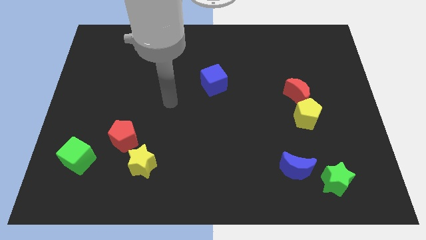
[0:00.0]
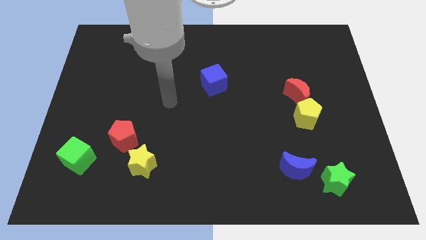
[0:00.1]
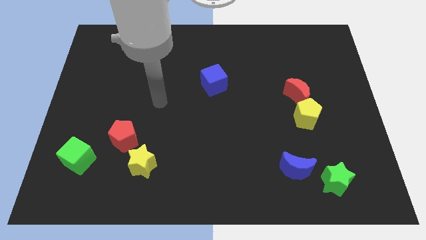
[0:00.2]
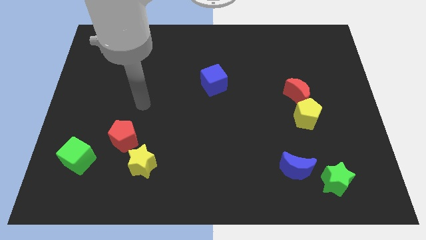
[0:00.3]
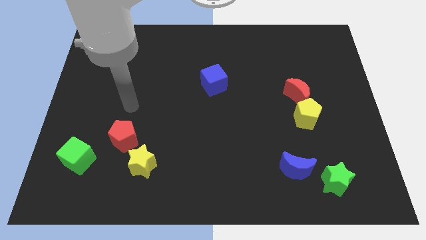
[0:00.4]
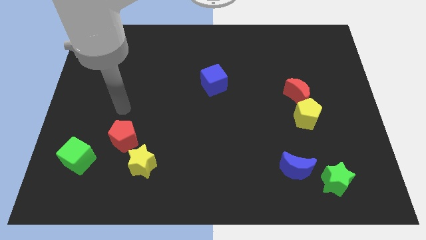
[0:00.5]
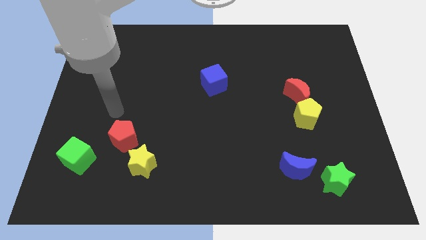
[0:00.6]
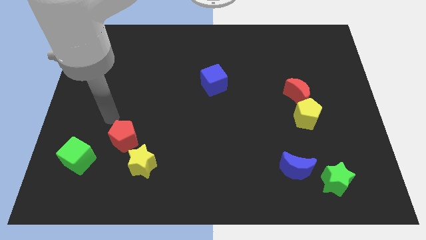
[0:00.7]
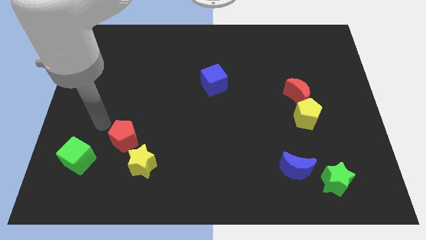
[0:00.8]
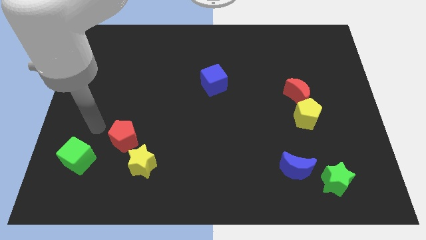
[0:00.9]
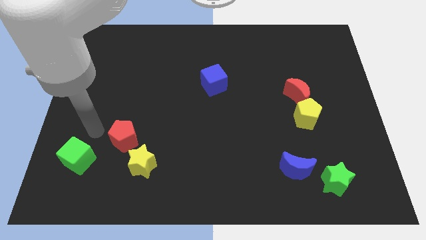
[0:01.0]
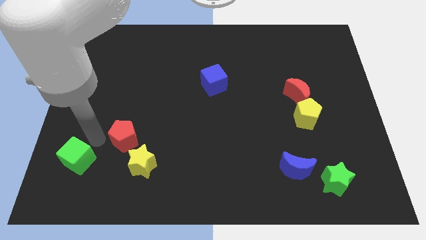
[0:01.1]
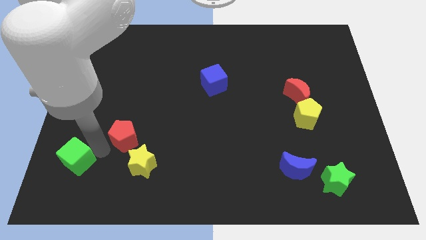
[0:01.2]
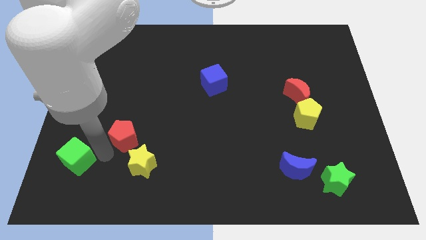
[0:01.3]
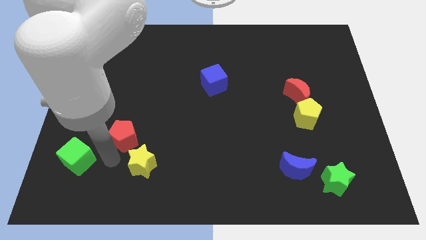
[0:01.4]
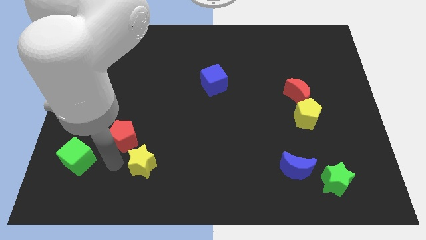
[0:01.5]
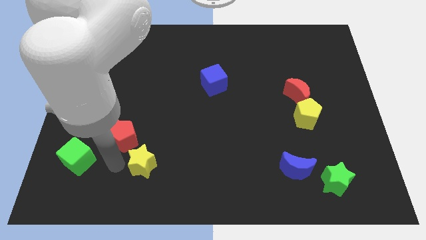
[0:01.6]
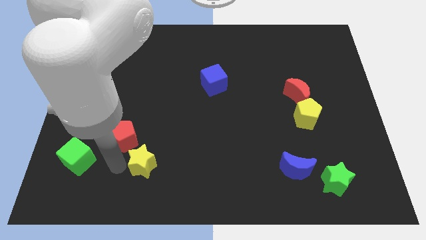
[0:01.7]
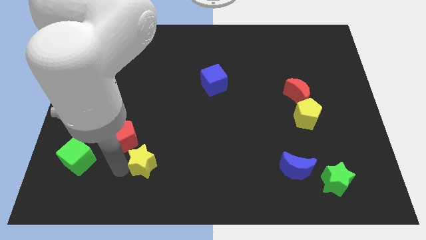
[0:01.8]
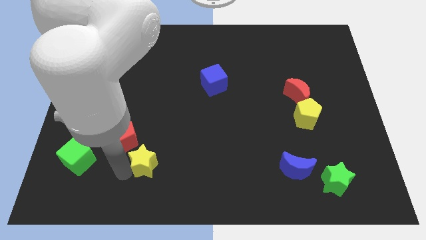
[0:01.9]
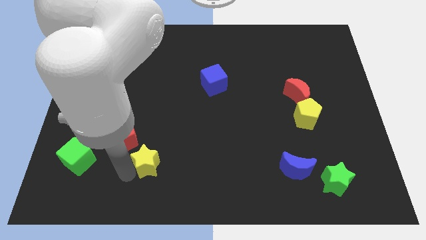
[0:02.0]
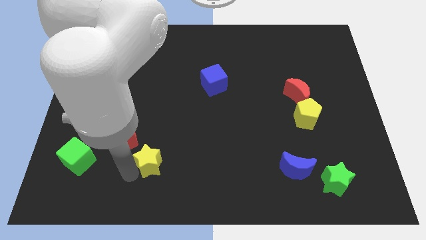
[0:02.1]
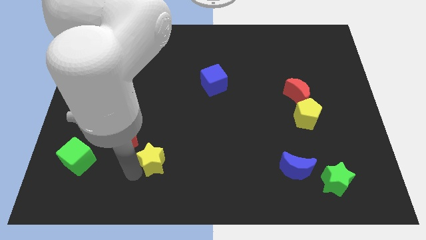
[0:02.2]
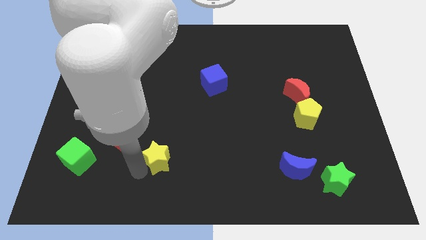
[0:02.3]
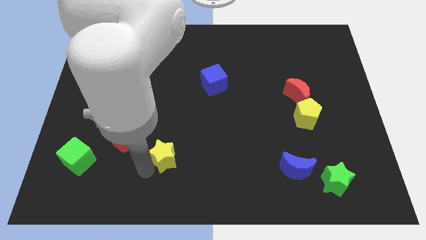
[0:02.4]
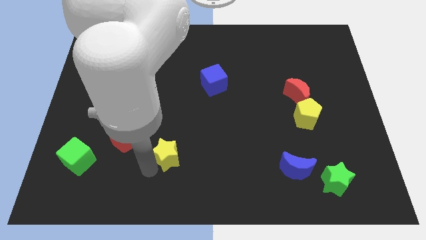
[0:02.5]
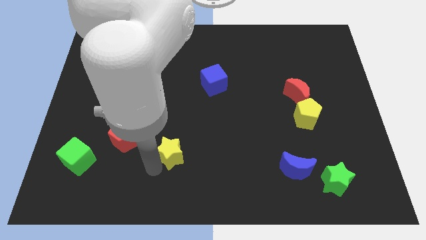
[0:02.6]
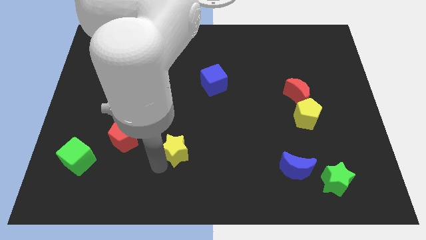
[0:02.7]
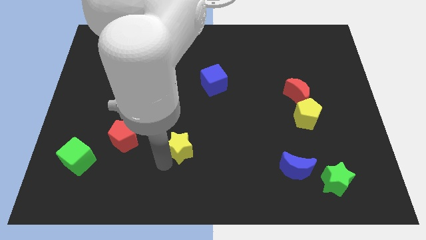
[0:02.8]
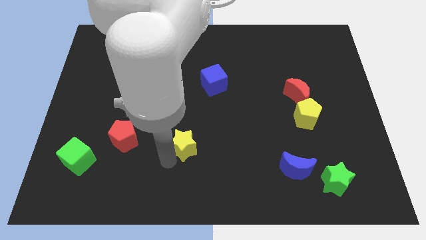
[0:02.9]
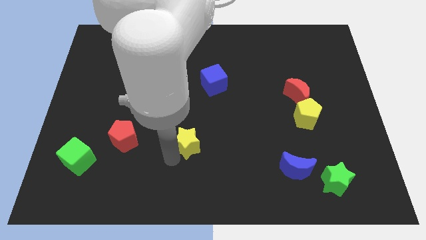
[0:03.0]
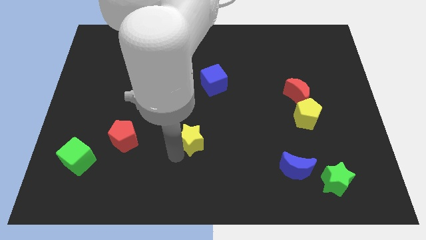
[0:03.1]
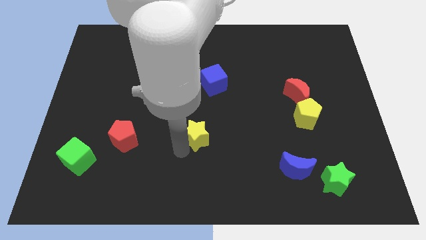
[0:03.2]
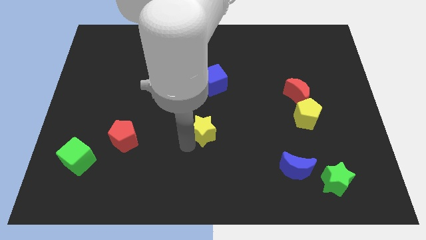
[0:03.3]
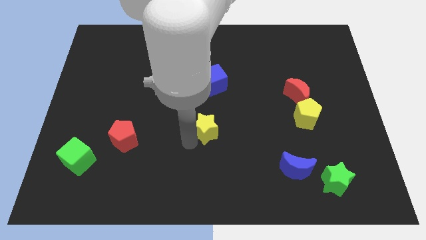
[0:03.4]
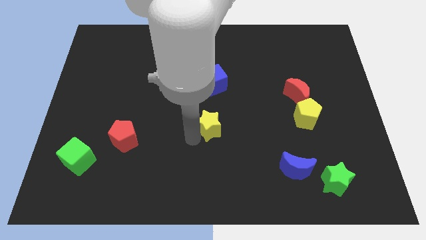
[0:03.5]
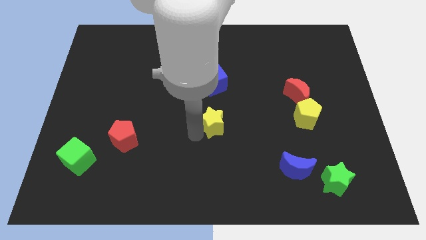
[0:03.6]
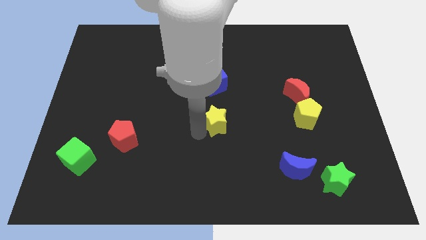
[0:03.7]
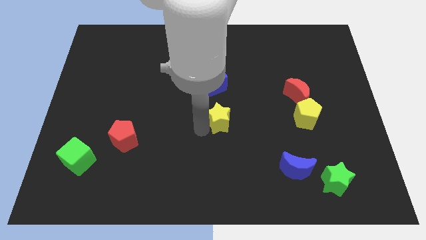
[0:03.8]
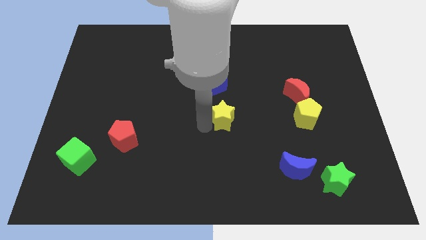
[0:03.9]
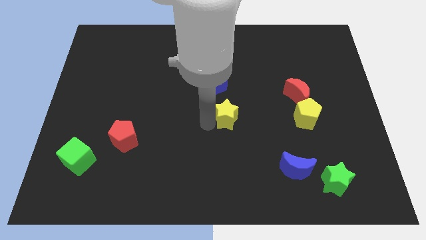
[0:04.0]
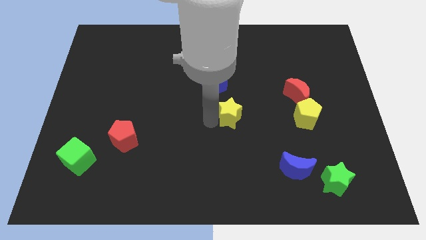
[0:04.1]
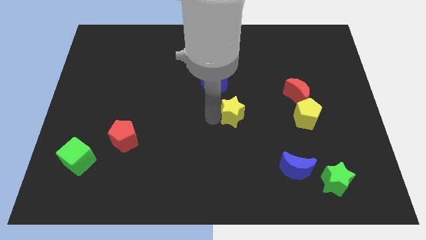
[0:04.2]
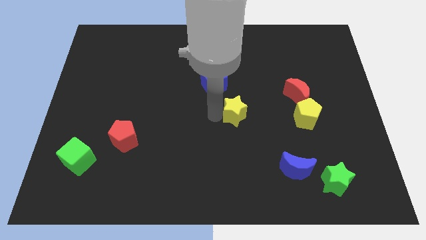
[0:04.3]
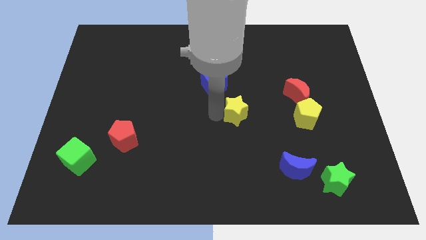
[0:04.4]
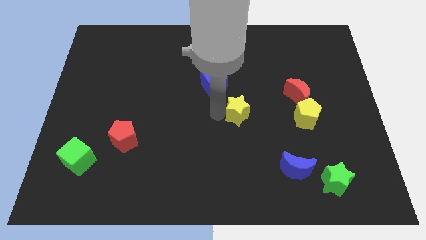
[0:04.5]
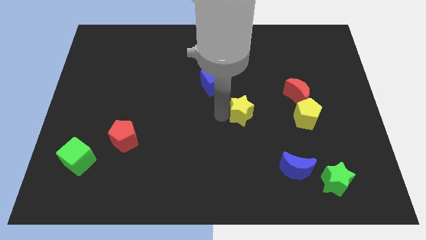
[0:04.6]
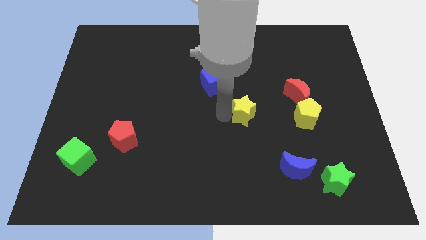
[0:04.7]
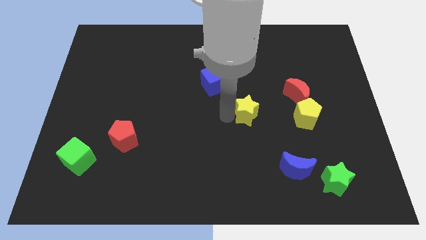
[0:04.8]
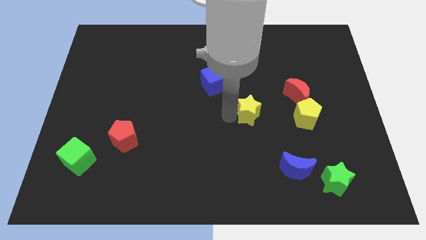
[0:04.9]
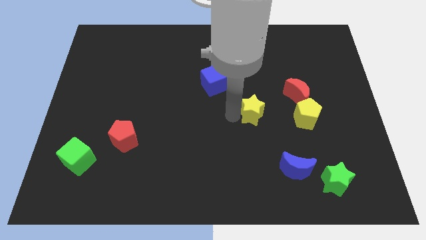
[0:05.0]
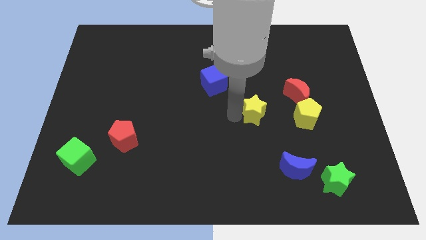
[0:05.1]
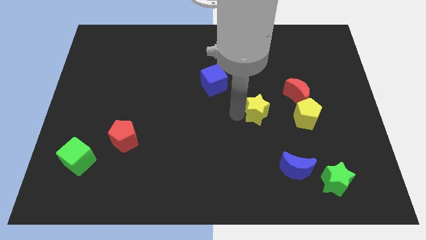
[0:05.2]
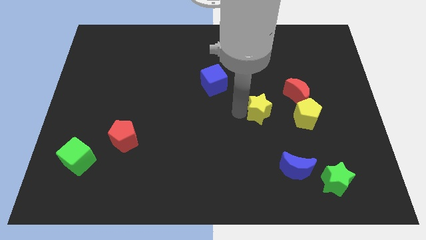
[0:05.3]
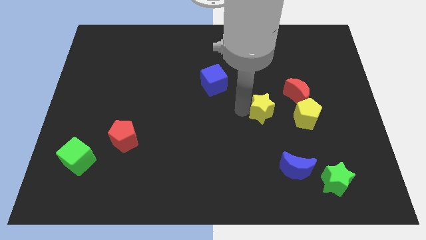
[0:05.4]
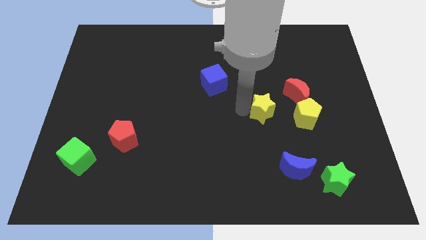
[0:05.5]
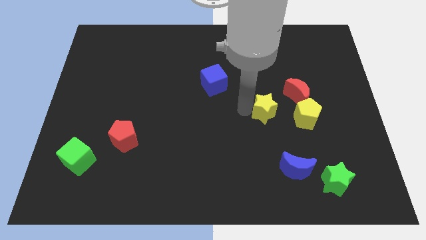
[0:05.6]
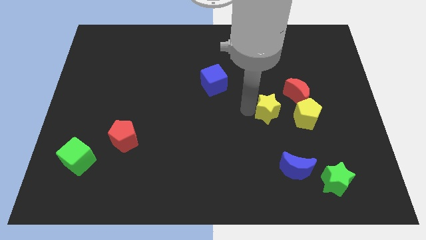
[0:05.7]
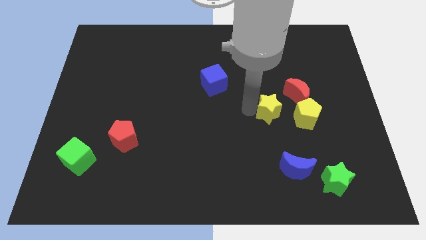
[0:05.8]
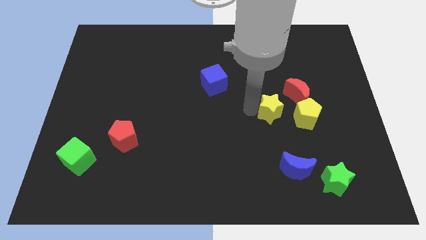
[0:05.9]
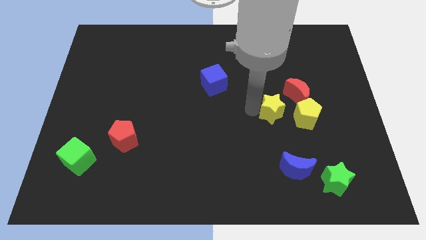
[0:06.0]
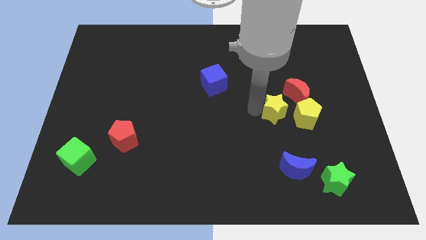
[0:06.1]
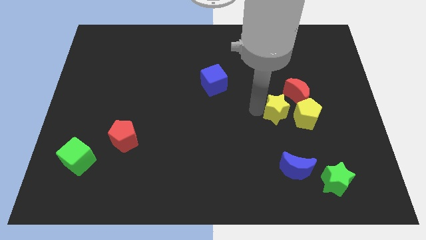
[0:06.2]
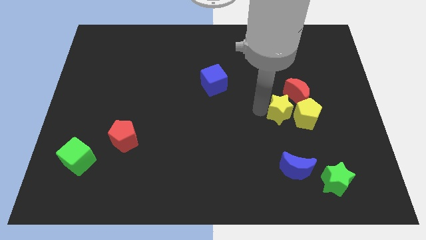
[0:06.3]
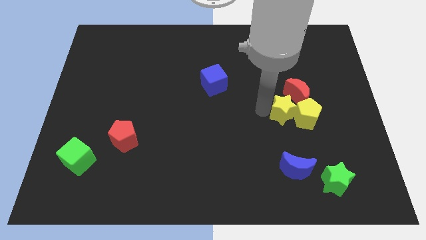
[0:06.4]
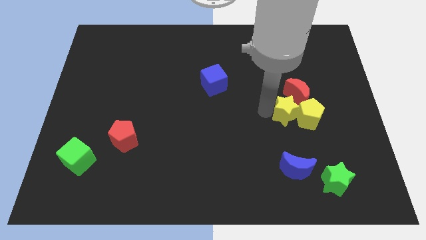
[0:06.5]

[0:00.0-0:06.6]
move the yellow star close to the yellow pentagon

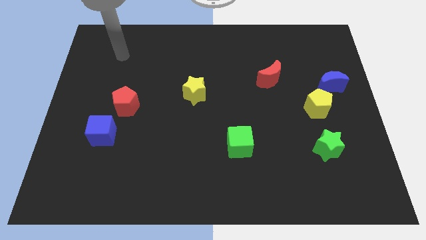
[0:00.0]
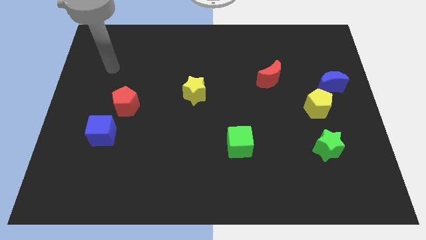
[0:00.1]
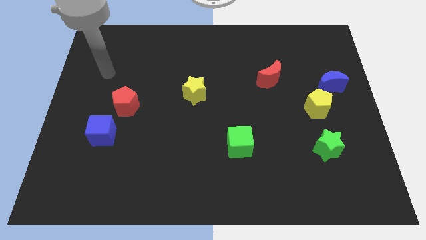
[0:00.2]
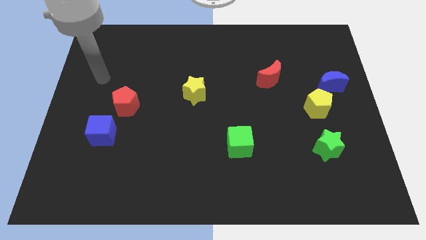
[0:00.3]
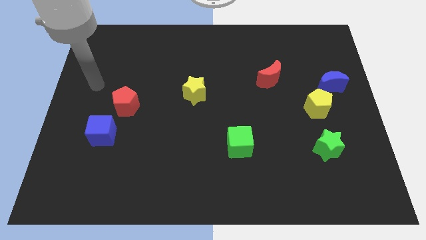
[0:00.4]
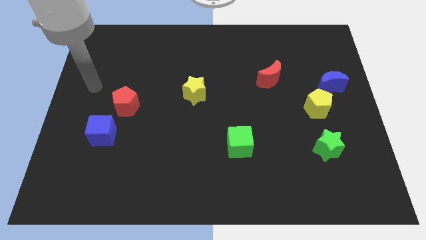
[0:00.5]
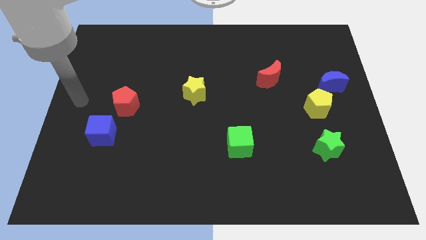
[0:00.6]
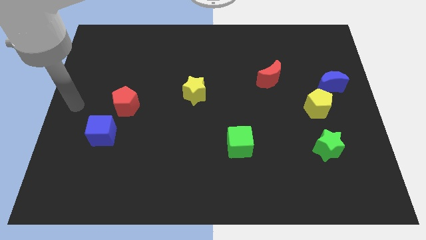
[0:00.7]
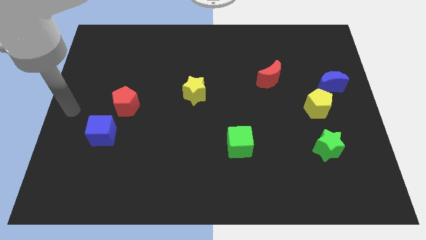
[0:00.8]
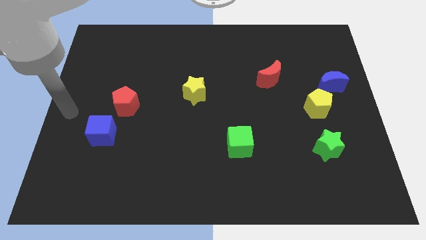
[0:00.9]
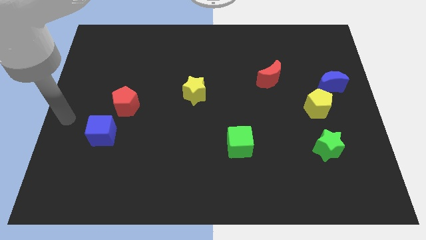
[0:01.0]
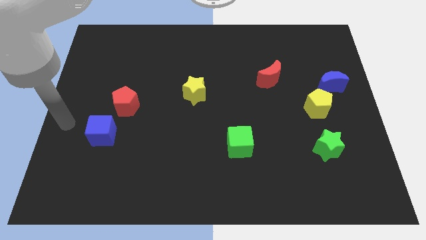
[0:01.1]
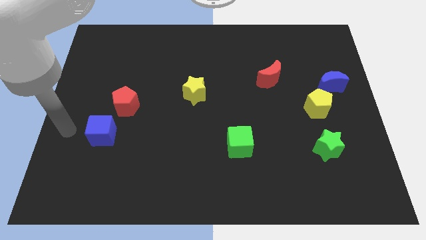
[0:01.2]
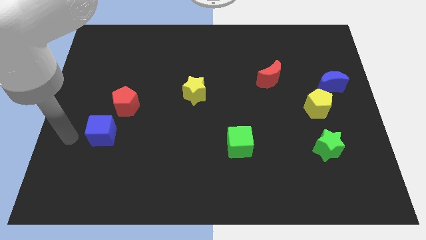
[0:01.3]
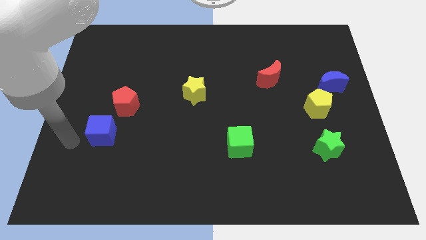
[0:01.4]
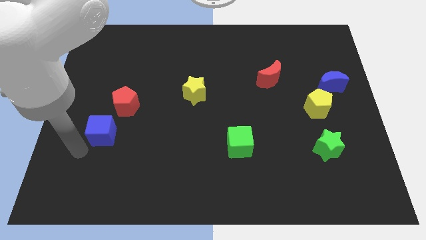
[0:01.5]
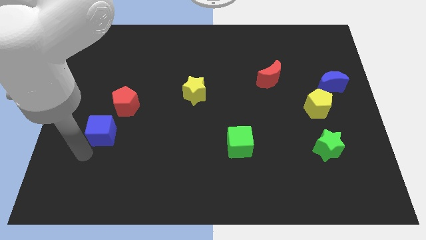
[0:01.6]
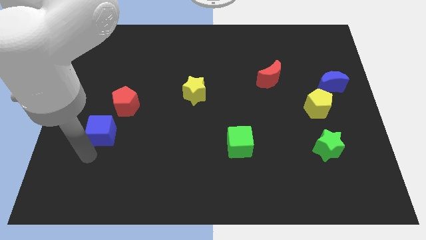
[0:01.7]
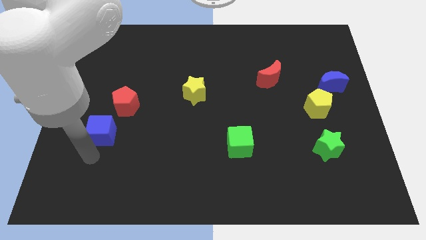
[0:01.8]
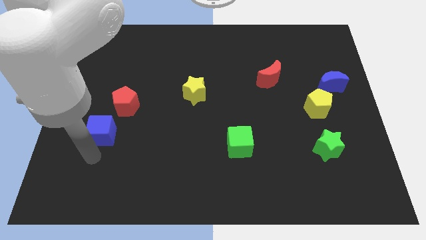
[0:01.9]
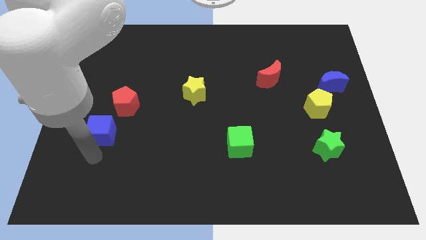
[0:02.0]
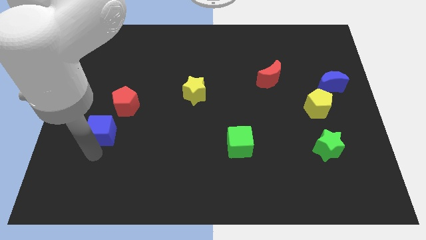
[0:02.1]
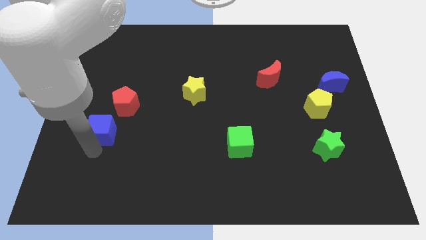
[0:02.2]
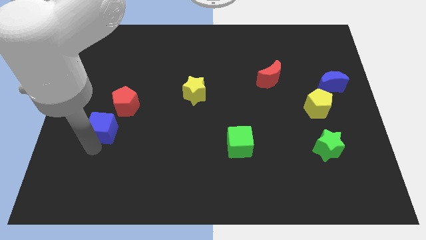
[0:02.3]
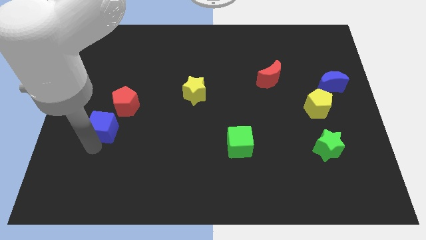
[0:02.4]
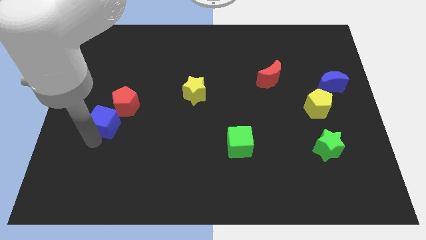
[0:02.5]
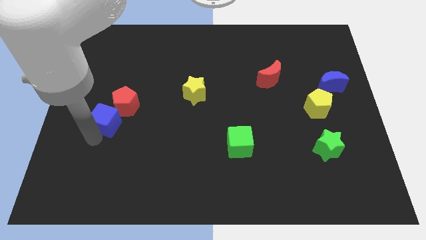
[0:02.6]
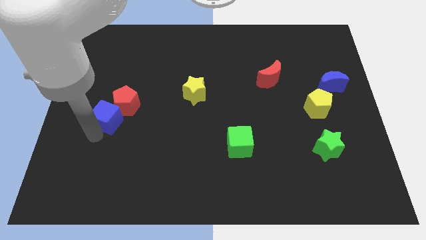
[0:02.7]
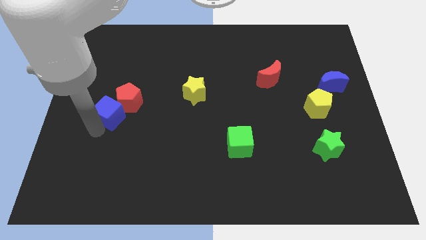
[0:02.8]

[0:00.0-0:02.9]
put the blue cube next to the red pentagon
